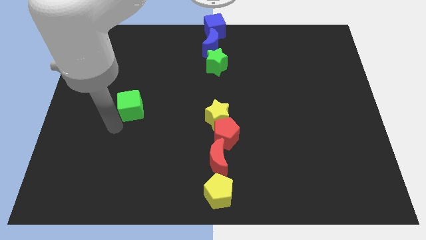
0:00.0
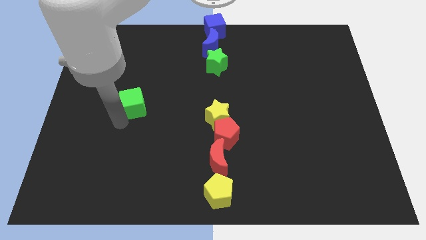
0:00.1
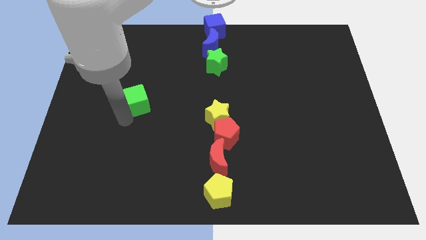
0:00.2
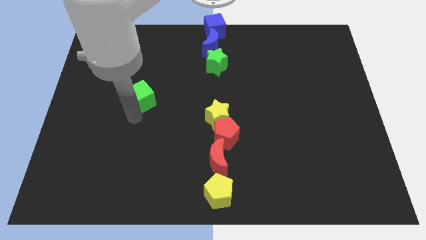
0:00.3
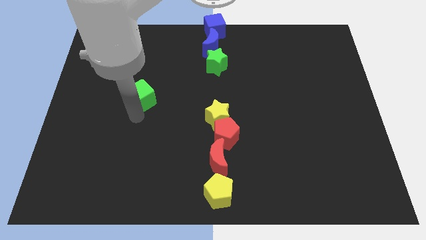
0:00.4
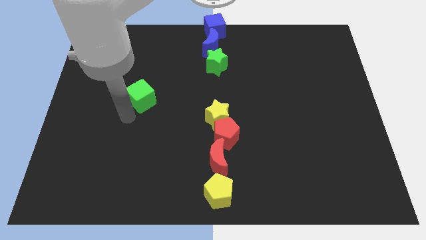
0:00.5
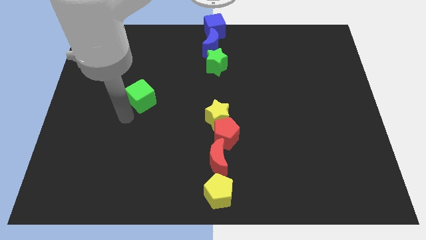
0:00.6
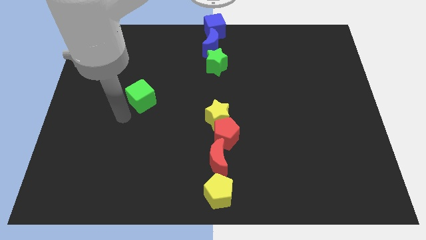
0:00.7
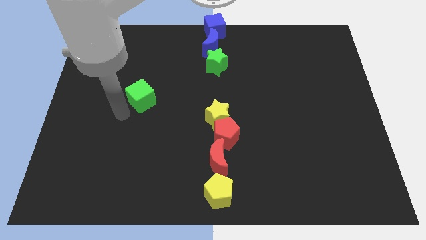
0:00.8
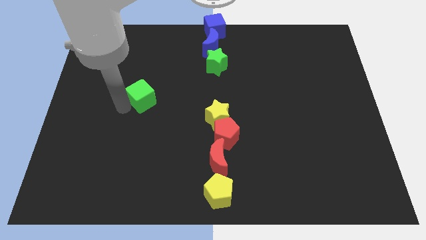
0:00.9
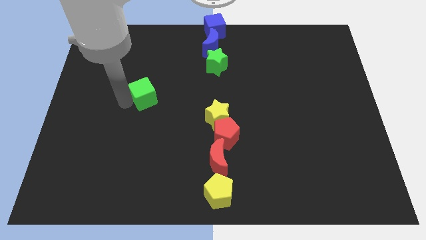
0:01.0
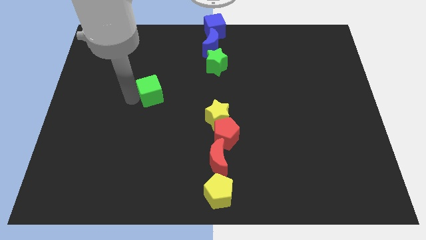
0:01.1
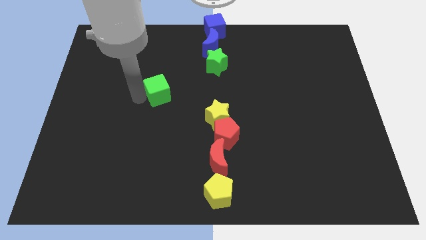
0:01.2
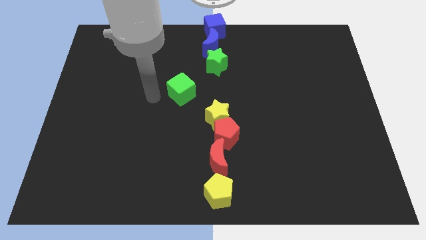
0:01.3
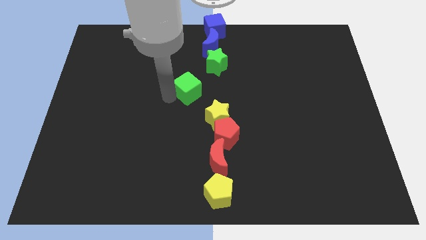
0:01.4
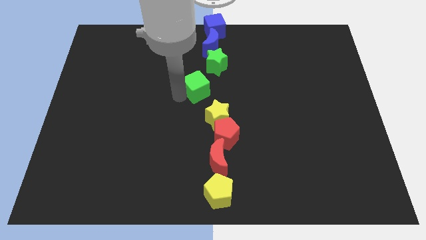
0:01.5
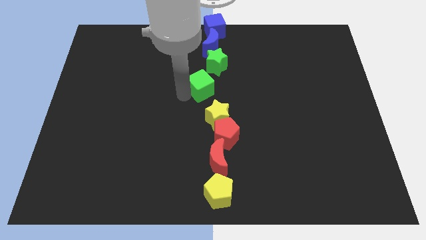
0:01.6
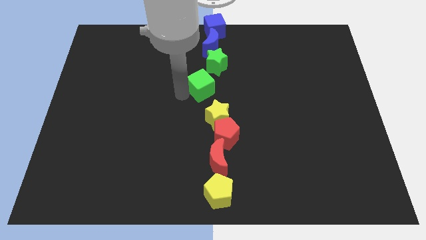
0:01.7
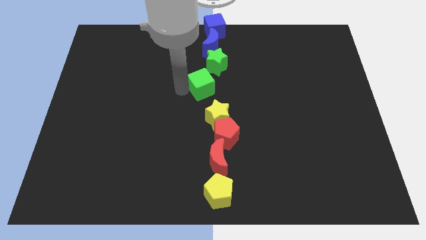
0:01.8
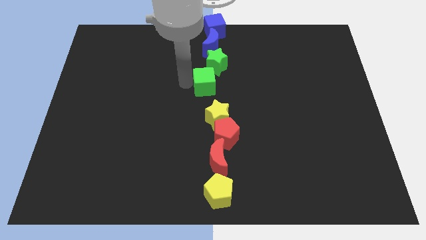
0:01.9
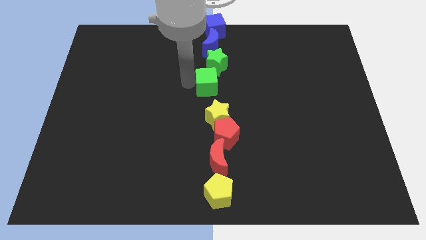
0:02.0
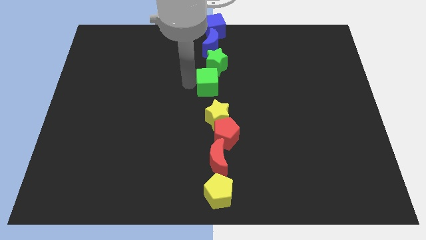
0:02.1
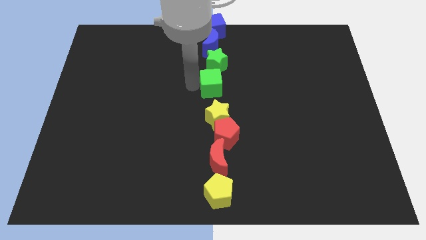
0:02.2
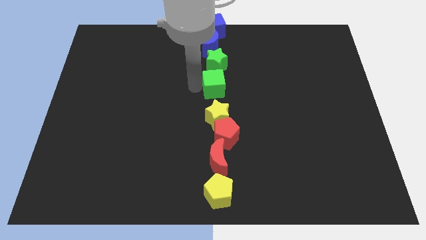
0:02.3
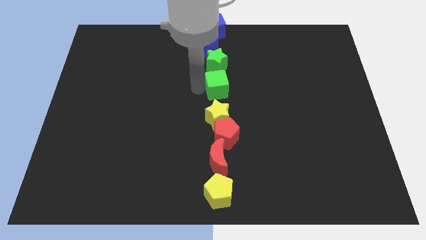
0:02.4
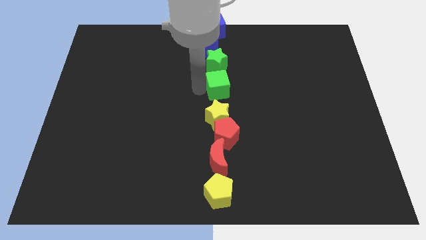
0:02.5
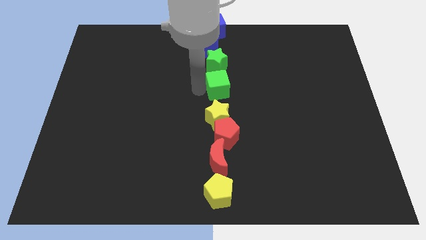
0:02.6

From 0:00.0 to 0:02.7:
place green cube at the top of the yellow star

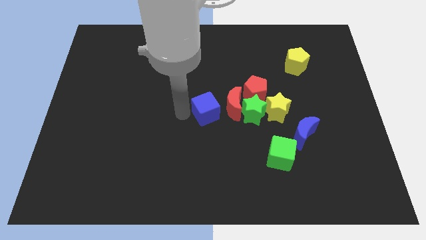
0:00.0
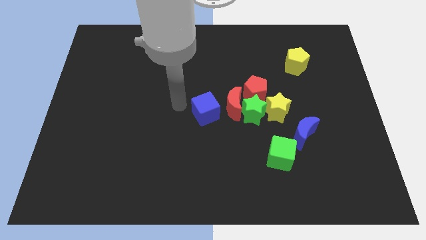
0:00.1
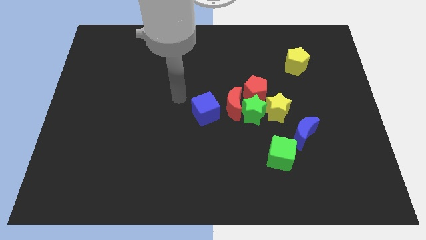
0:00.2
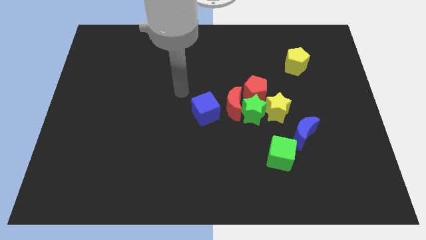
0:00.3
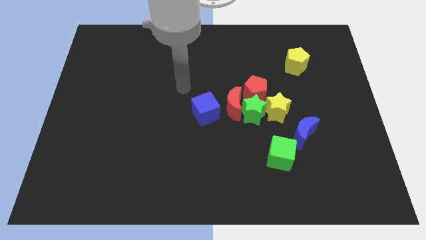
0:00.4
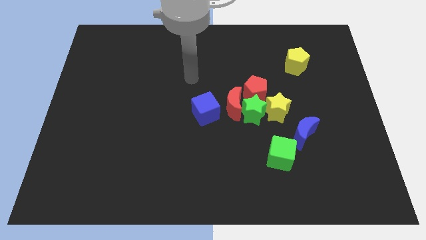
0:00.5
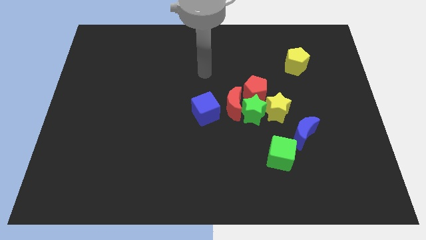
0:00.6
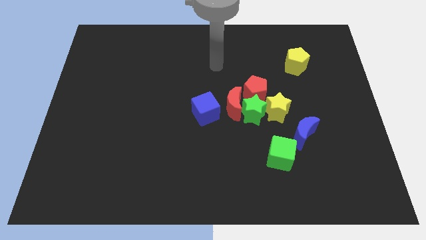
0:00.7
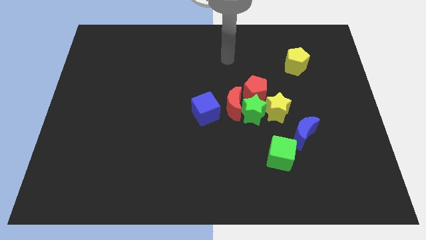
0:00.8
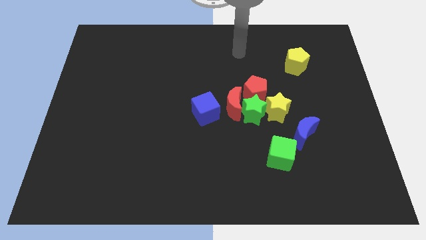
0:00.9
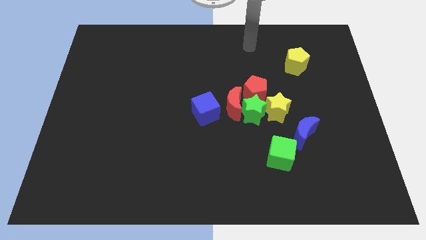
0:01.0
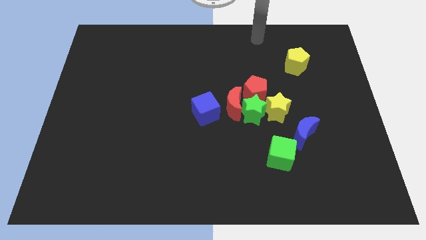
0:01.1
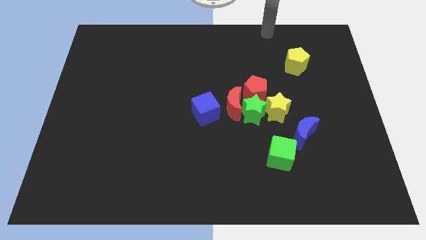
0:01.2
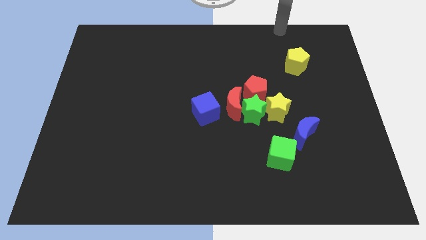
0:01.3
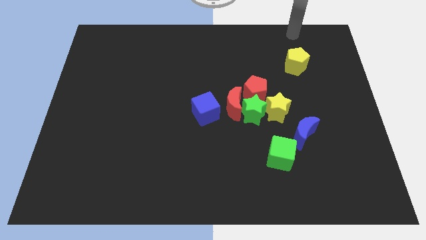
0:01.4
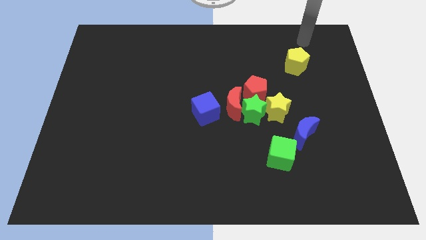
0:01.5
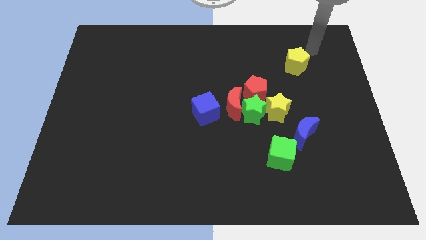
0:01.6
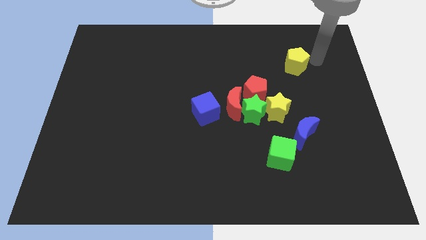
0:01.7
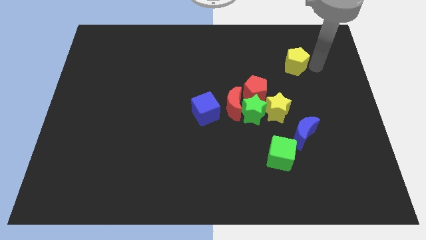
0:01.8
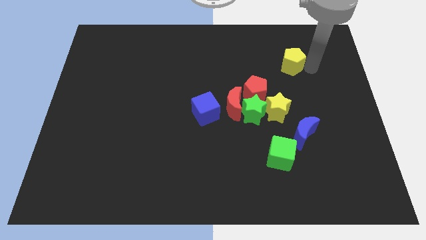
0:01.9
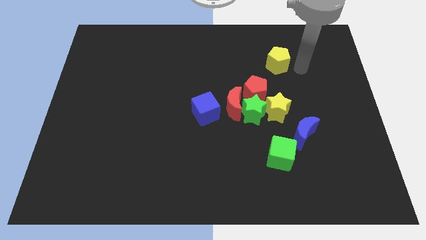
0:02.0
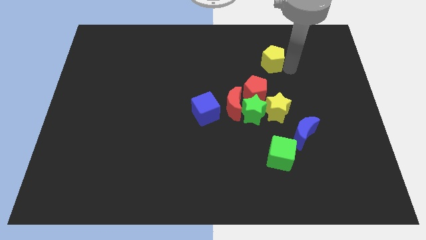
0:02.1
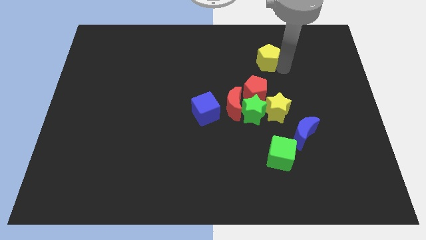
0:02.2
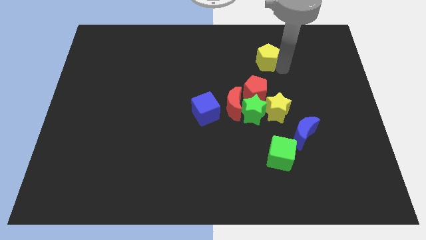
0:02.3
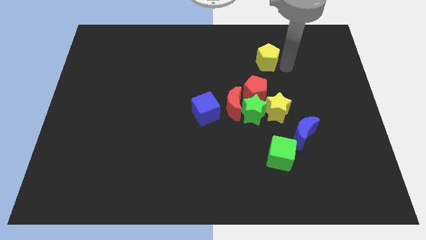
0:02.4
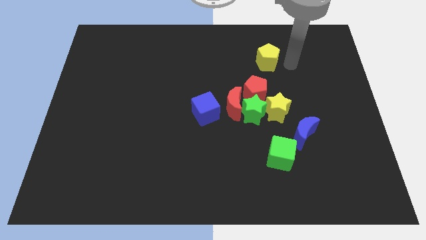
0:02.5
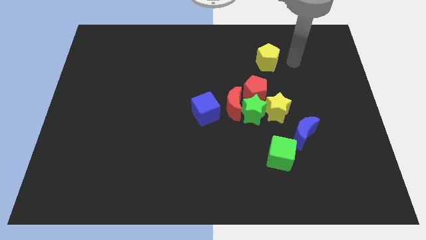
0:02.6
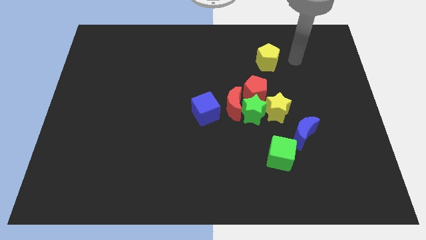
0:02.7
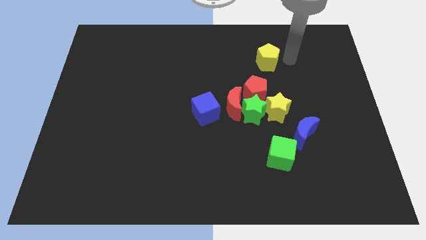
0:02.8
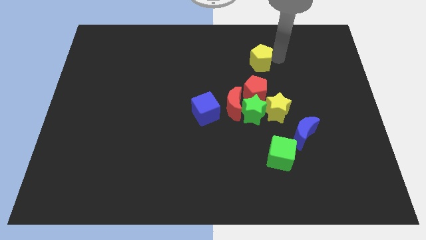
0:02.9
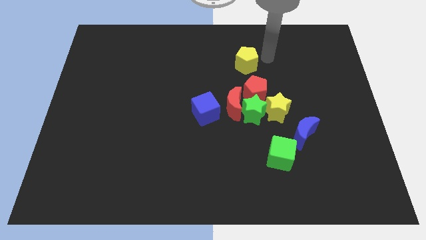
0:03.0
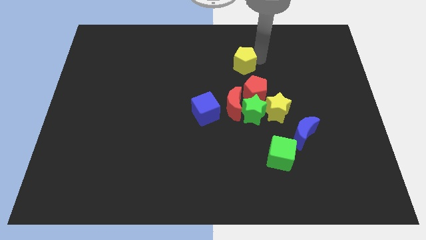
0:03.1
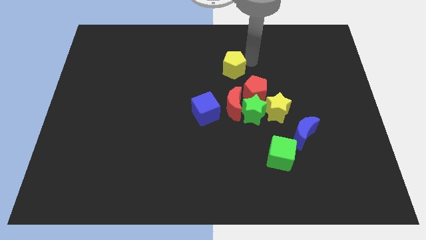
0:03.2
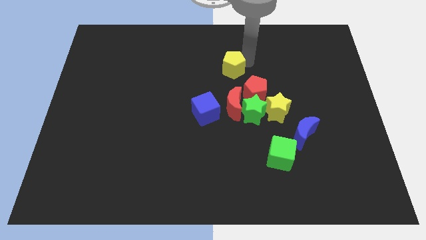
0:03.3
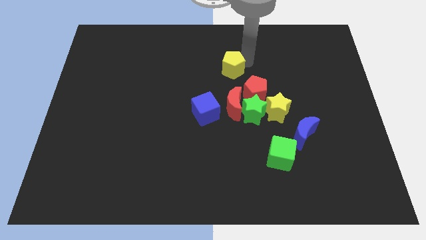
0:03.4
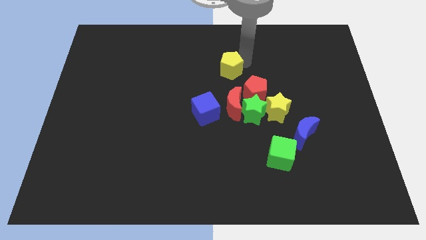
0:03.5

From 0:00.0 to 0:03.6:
push the yellow pentagon above the red crescent

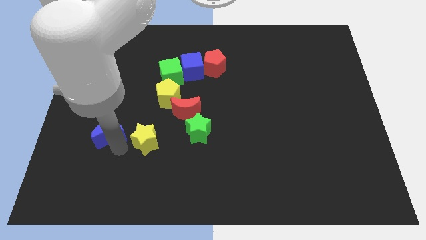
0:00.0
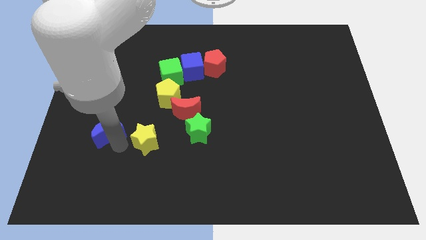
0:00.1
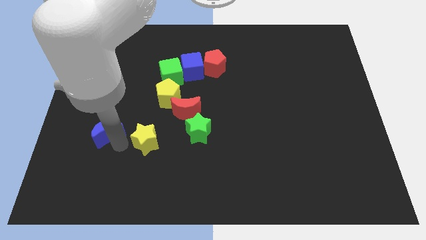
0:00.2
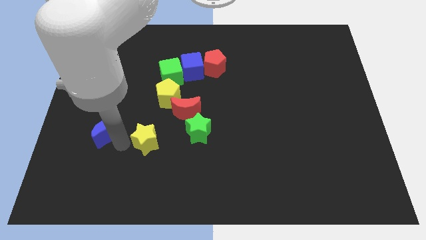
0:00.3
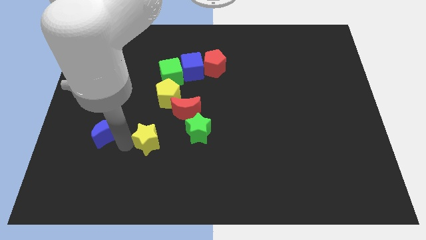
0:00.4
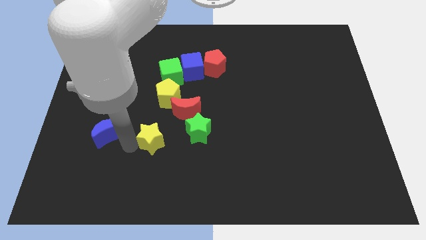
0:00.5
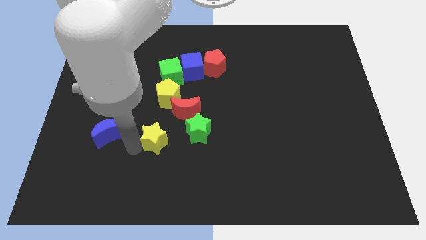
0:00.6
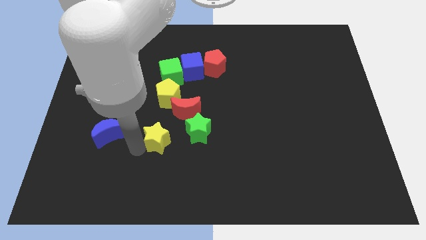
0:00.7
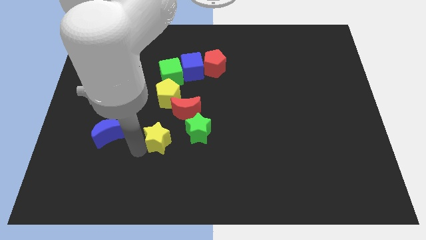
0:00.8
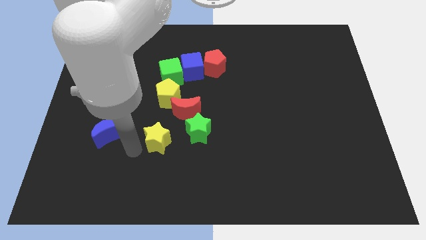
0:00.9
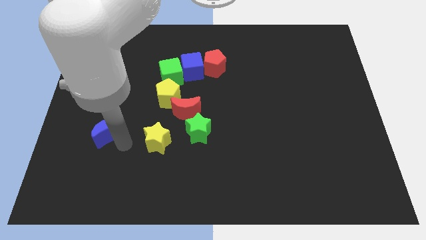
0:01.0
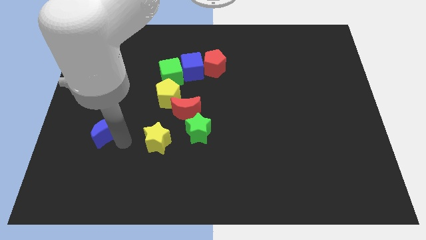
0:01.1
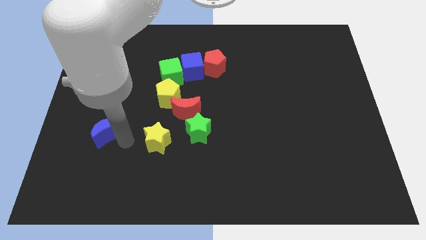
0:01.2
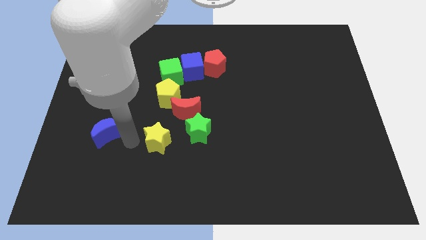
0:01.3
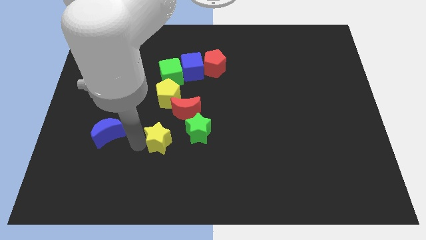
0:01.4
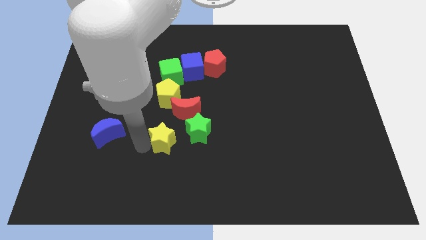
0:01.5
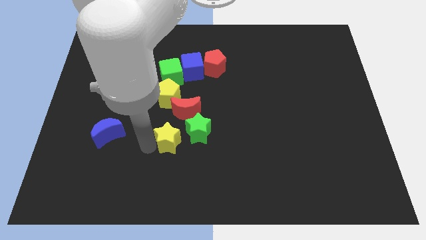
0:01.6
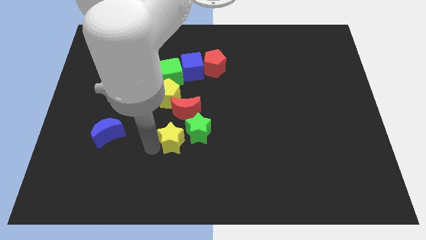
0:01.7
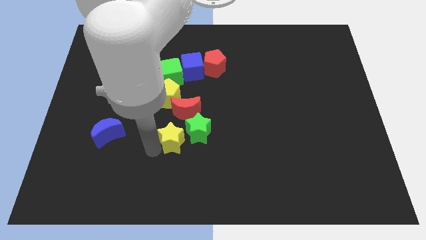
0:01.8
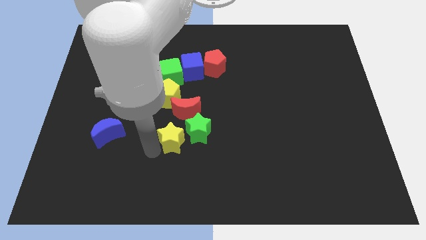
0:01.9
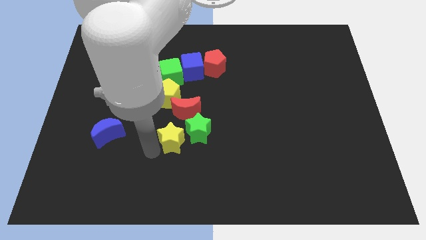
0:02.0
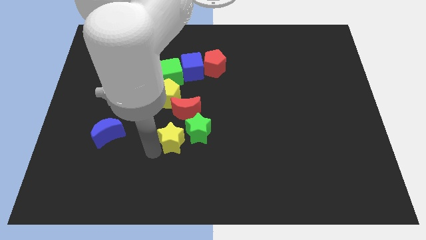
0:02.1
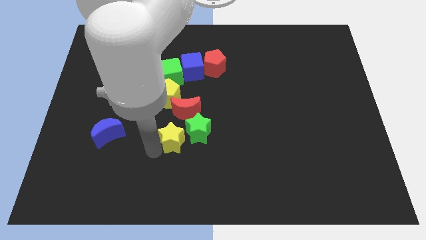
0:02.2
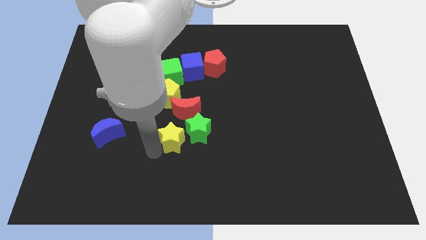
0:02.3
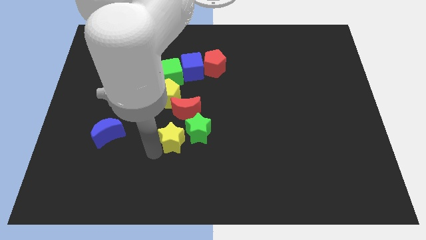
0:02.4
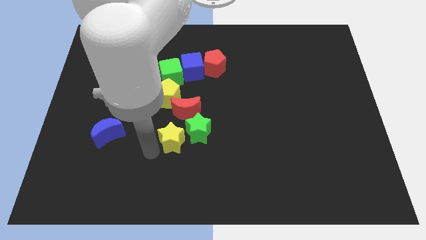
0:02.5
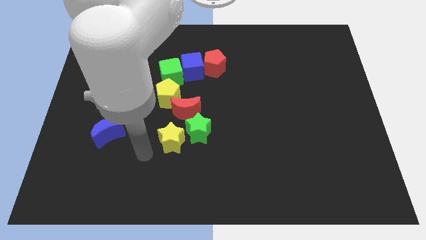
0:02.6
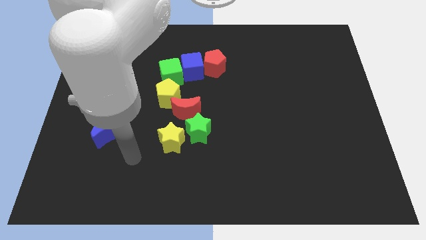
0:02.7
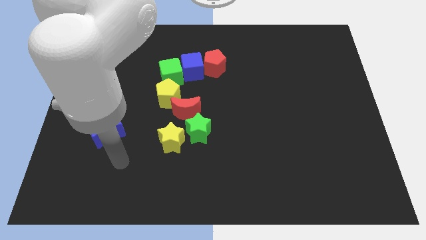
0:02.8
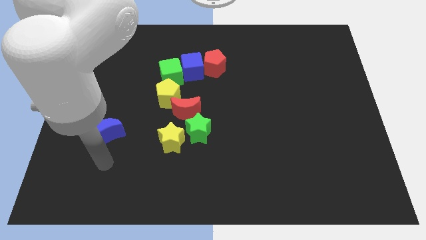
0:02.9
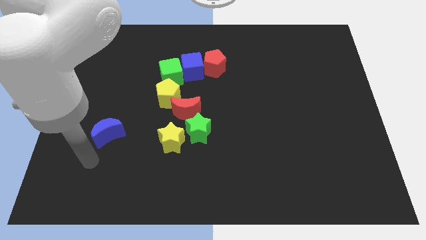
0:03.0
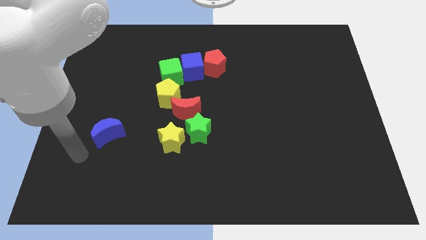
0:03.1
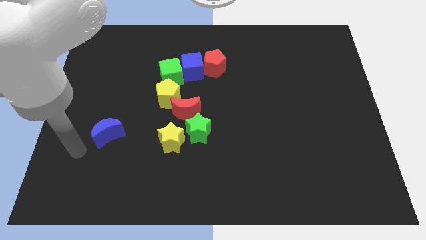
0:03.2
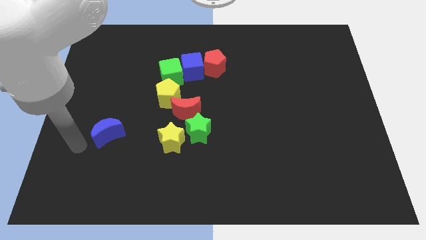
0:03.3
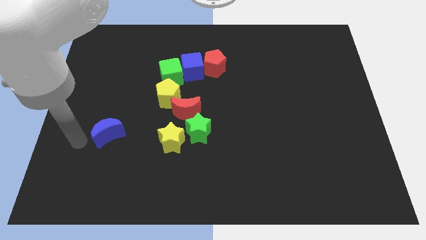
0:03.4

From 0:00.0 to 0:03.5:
move the yellow star to the bottom left side of the green star
